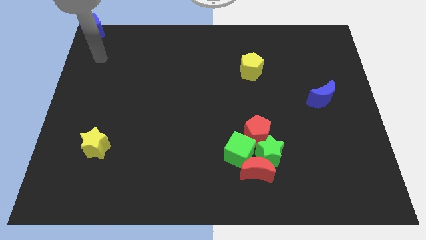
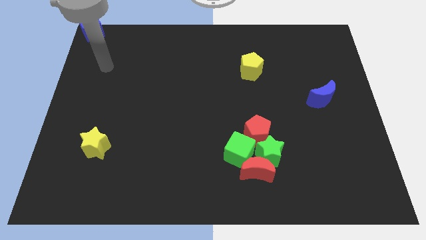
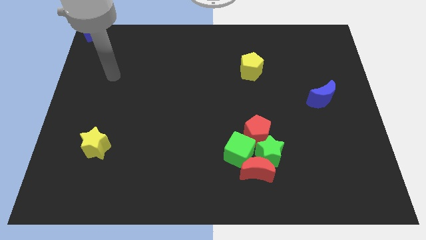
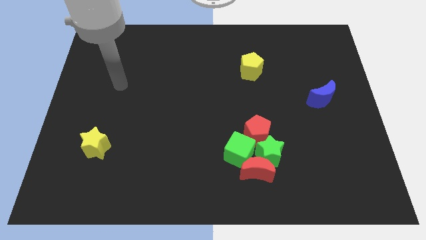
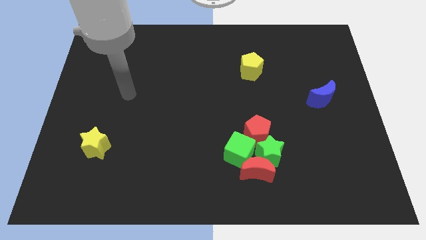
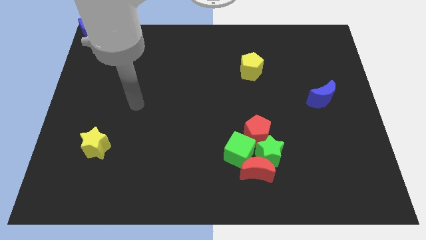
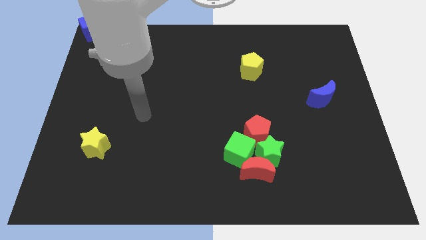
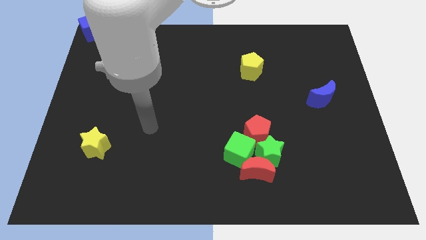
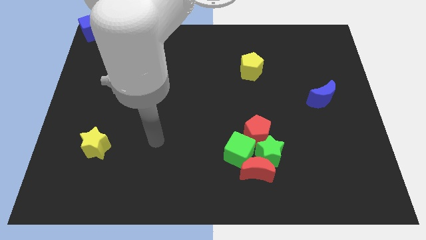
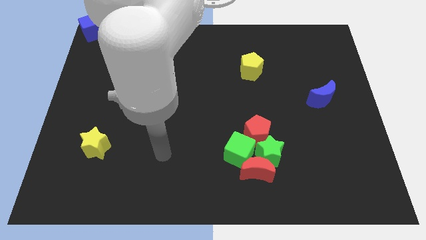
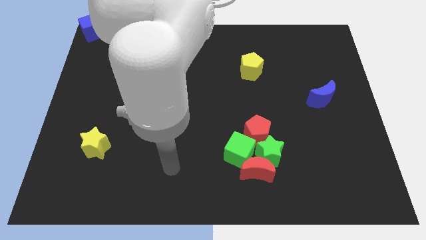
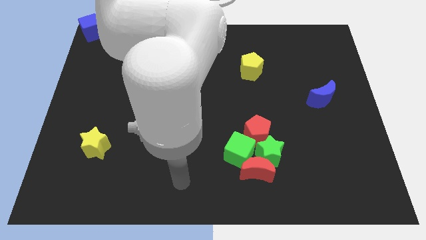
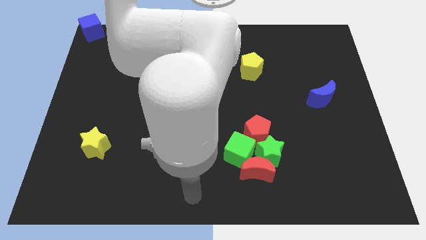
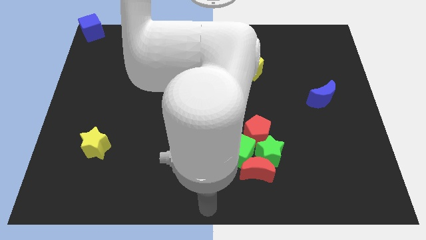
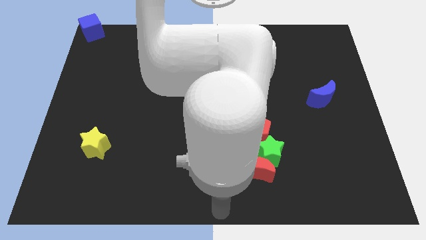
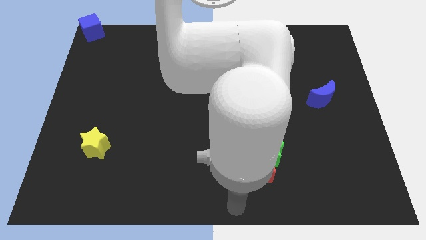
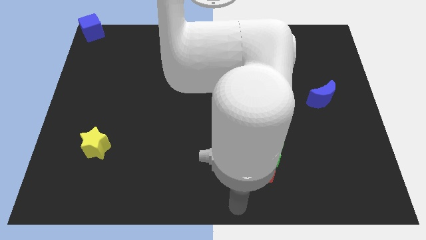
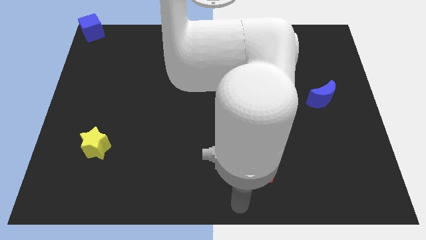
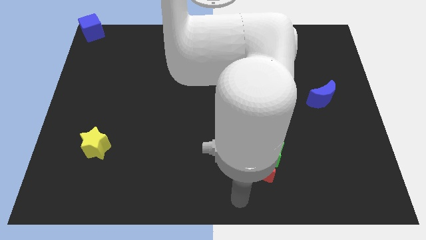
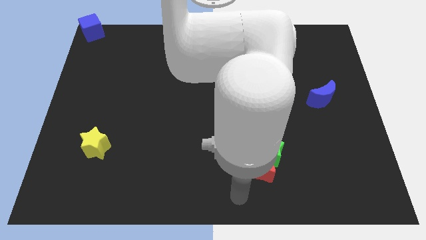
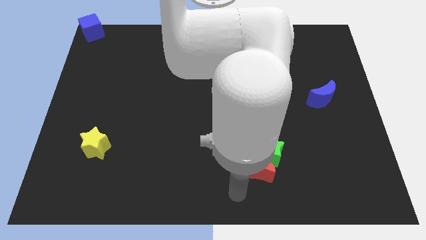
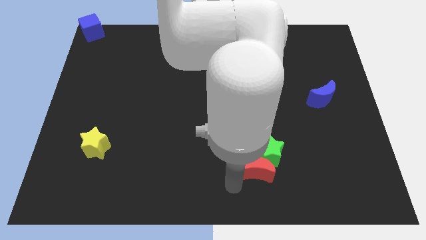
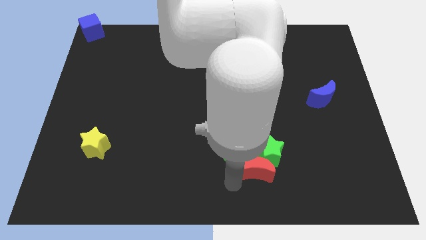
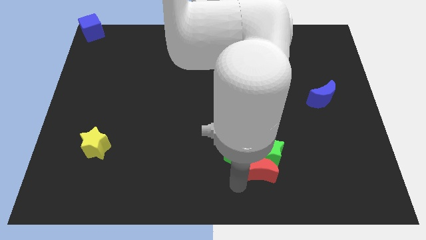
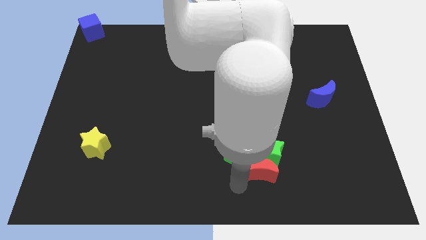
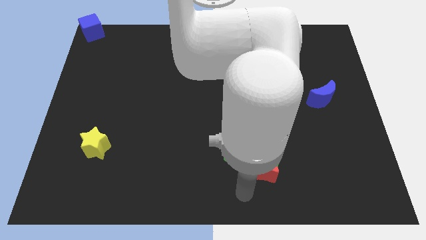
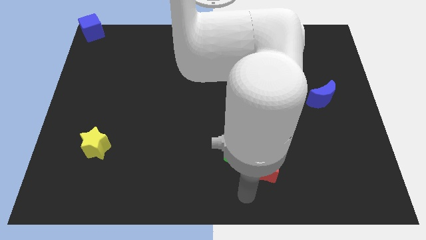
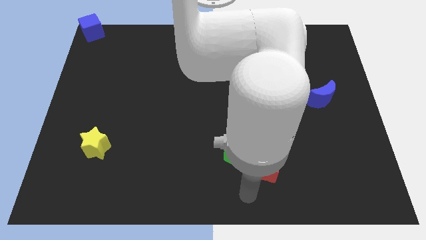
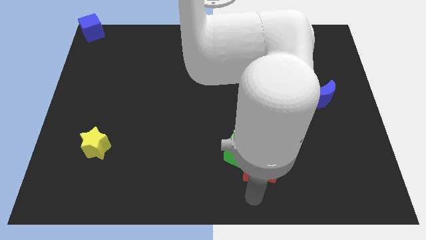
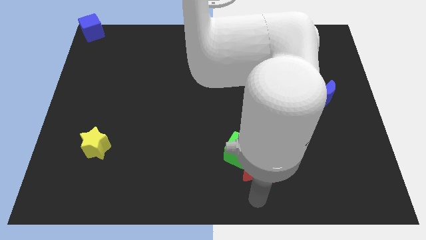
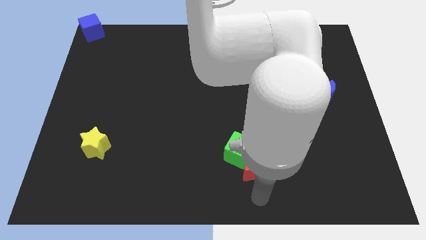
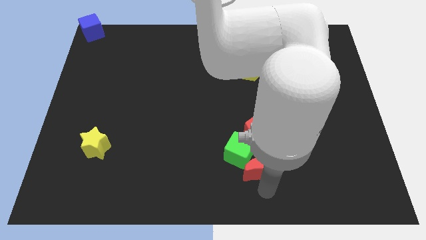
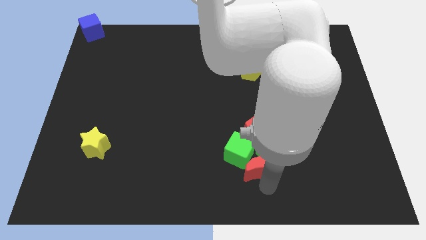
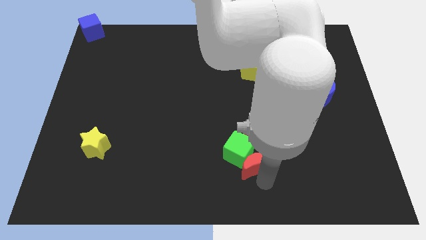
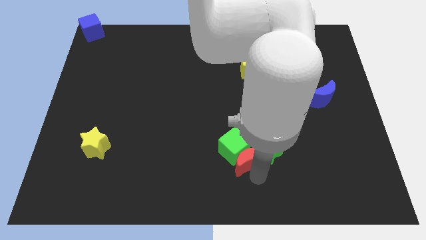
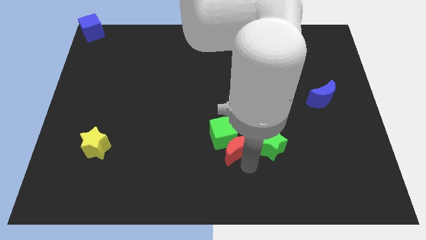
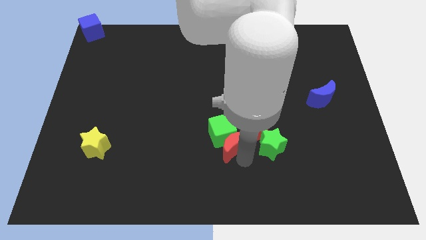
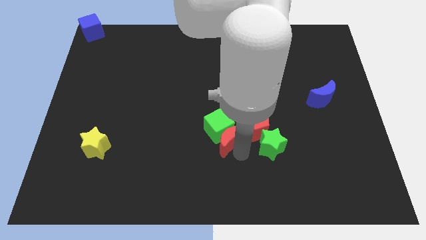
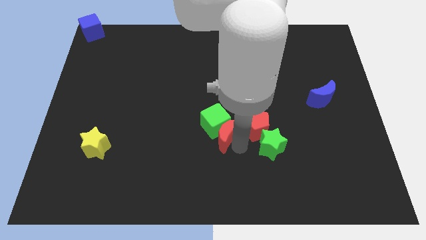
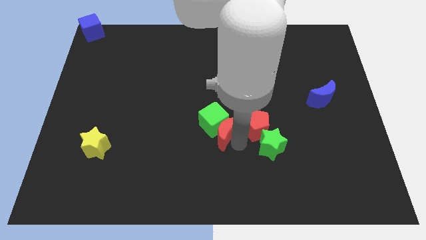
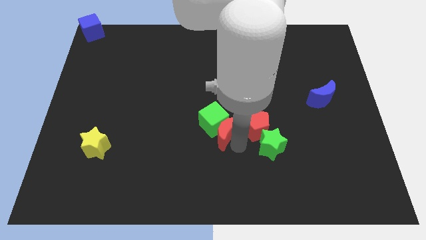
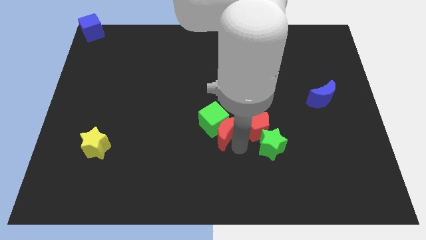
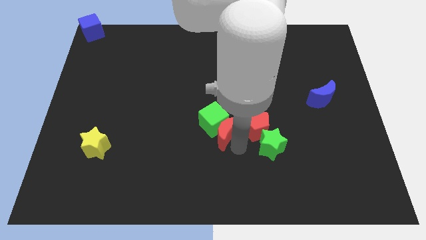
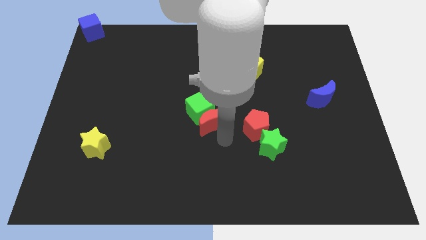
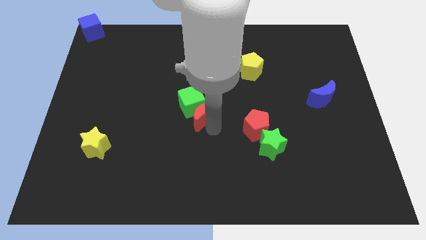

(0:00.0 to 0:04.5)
move the green cube along with the red crescent away from the group of blocks

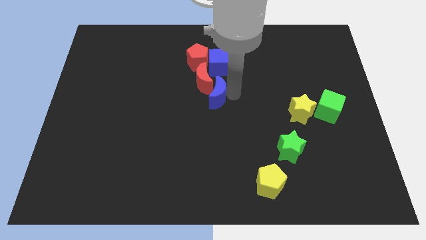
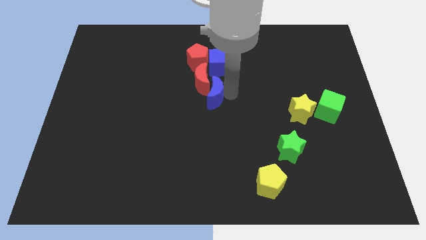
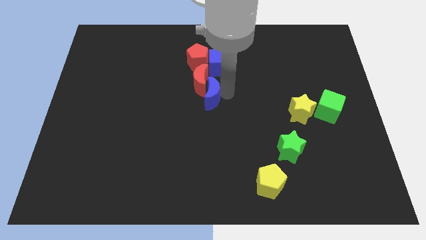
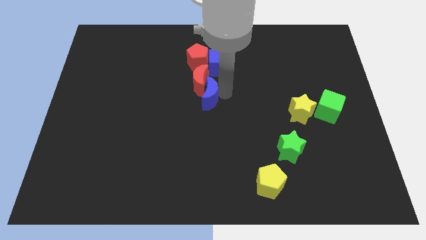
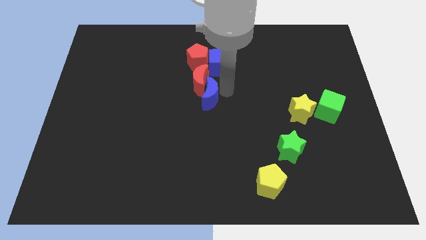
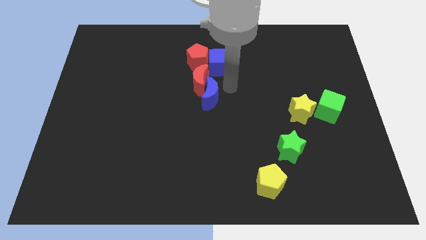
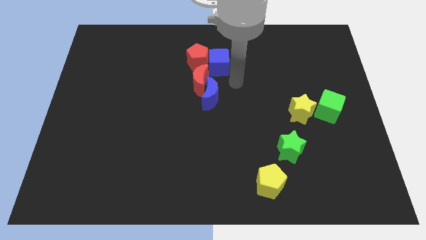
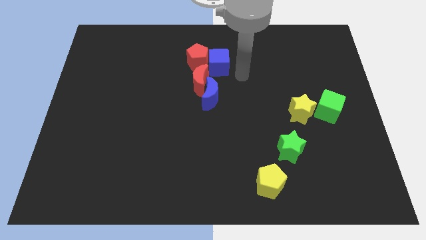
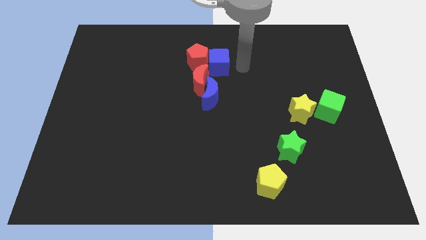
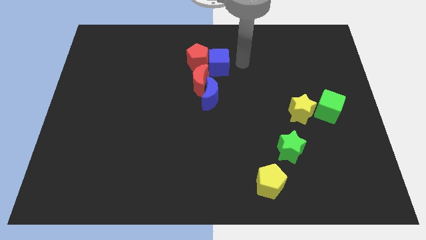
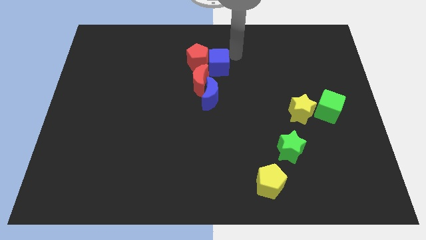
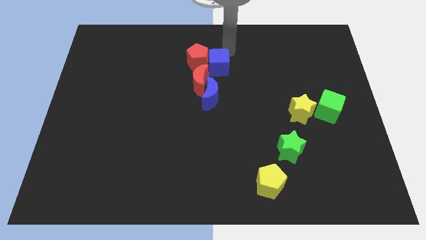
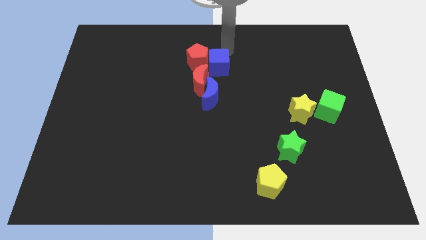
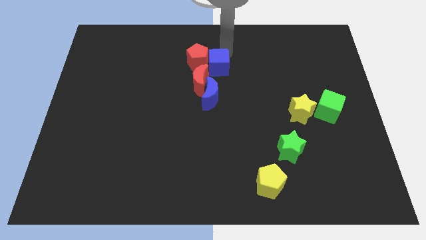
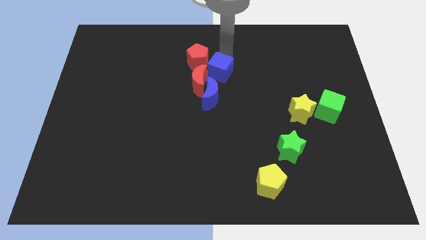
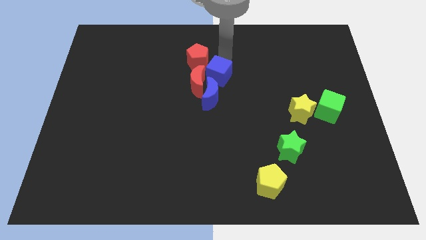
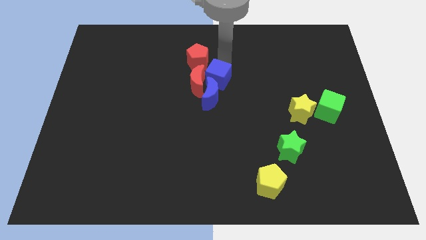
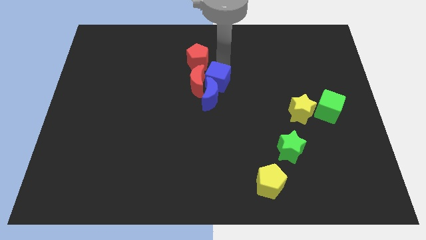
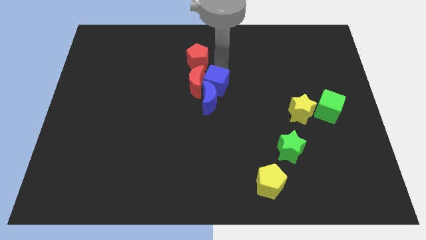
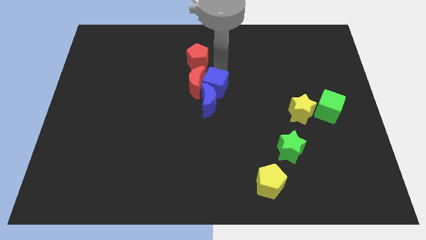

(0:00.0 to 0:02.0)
push the blue cube into the blue crescent

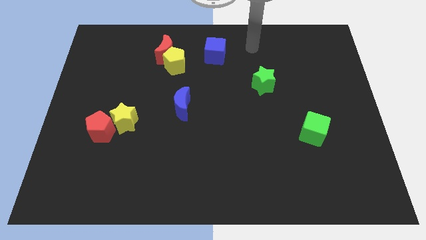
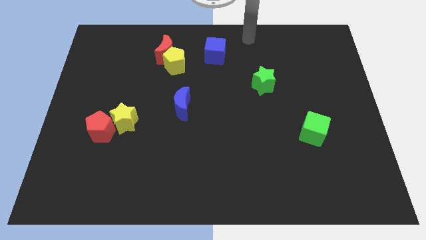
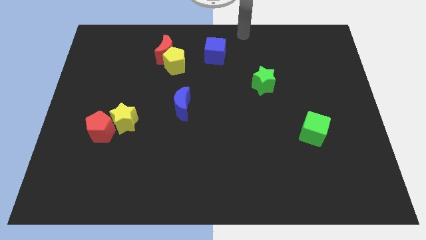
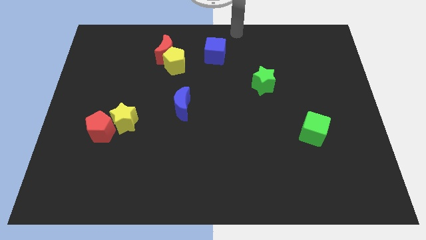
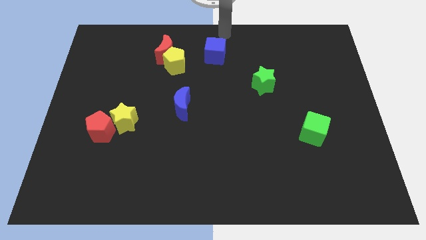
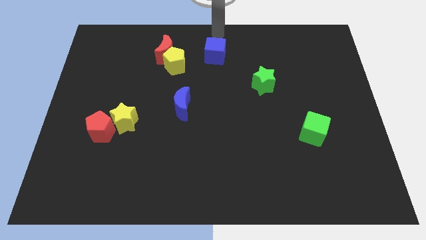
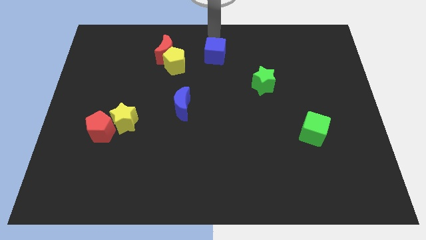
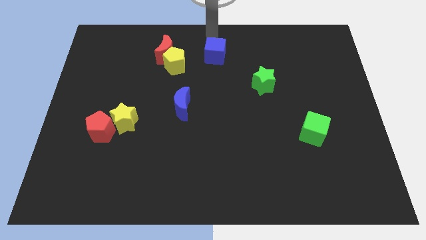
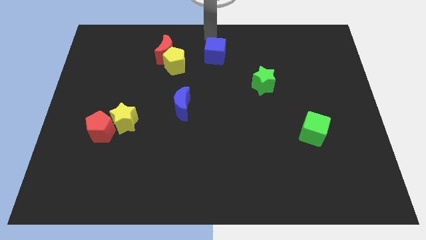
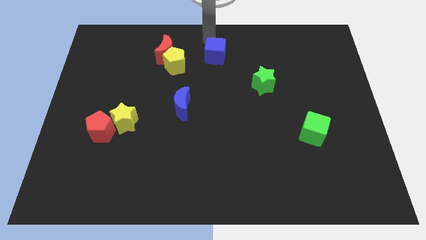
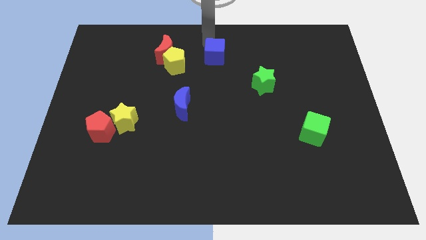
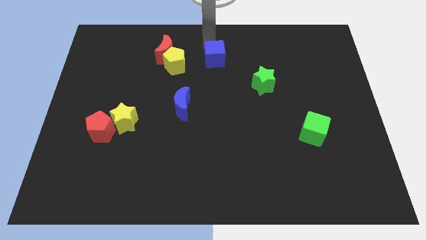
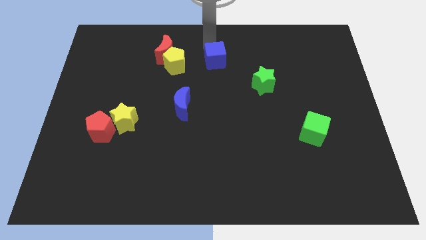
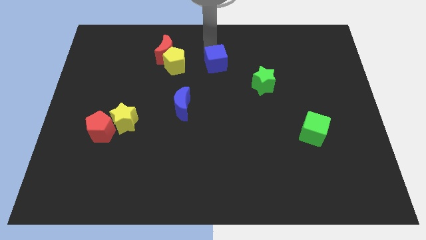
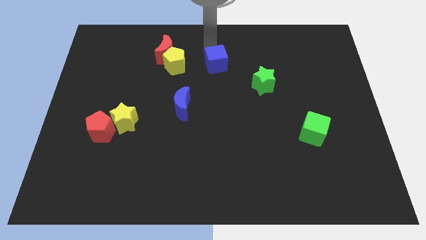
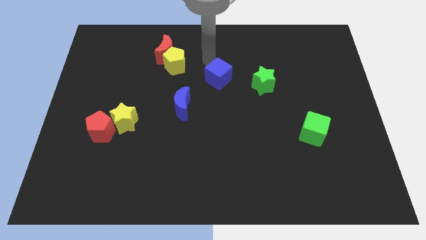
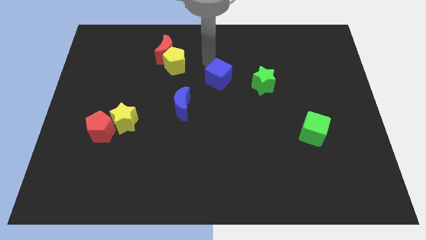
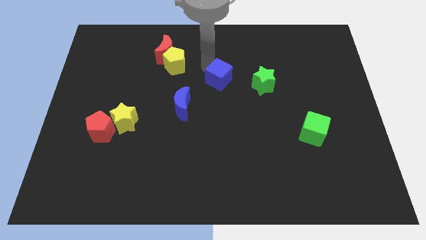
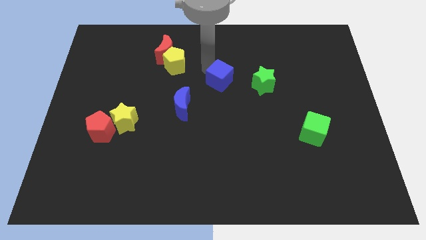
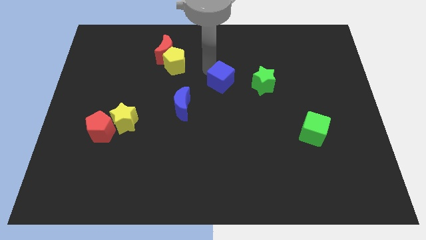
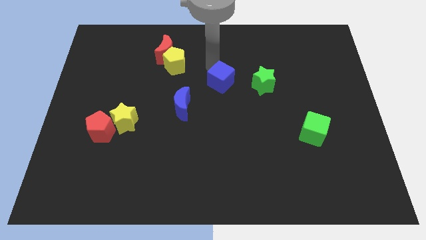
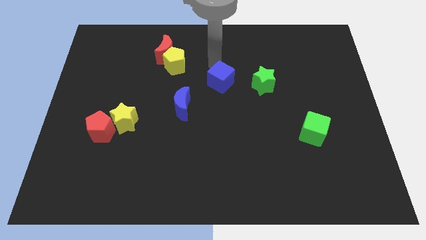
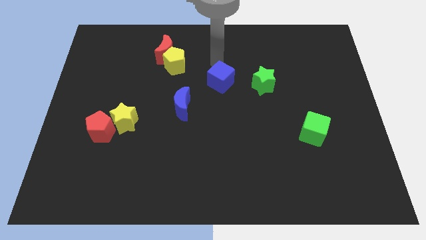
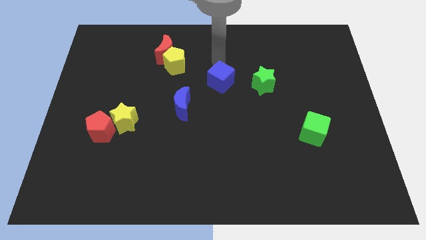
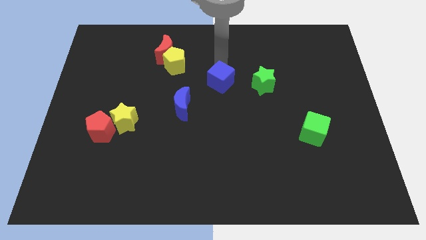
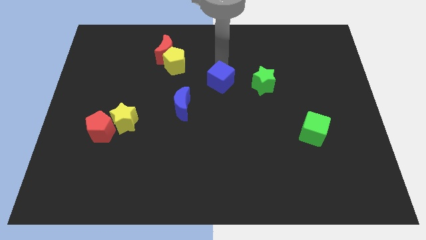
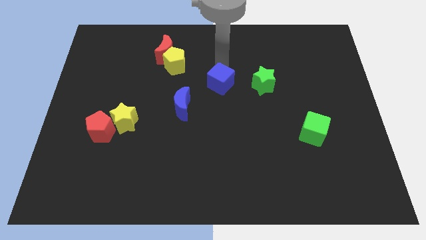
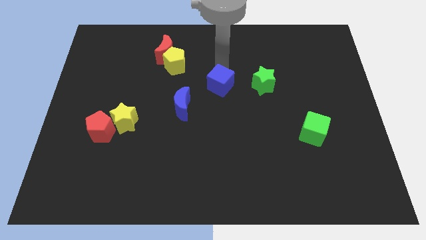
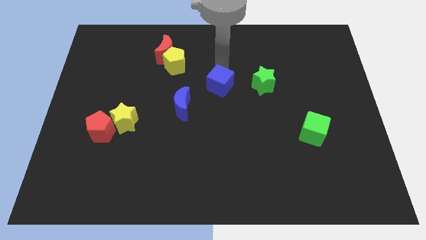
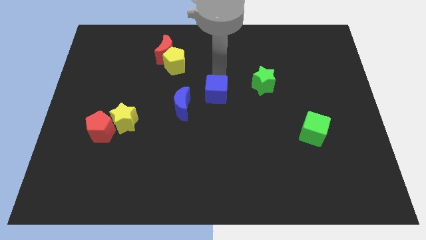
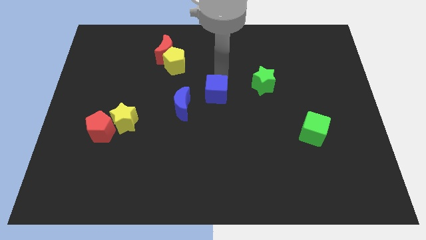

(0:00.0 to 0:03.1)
move blue cube down towards center
